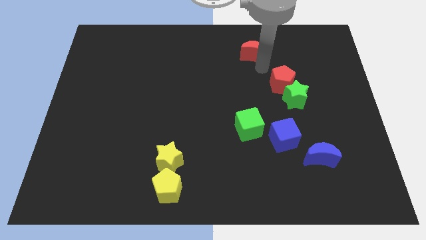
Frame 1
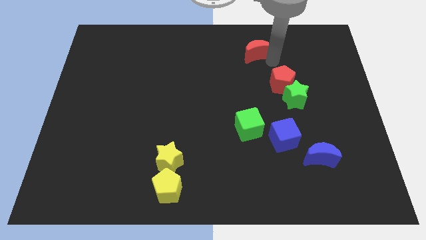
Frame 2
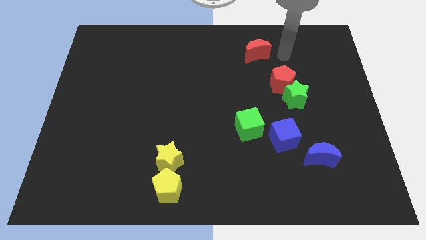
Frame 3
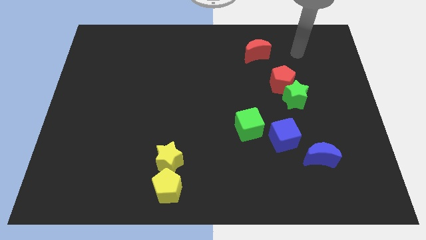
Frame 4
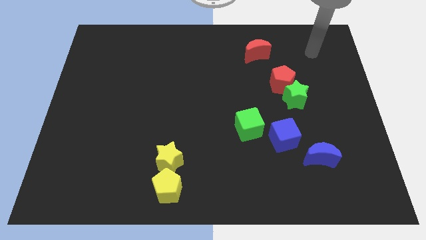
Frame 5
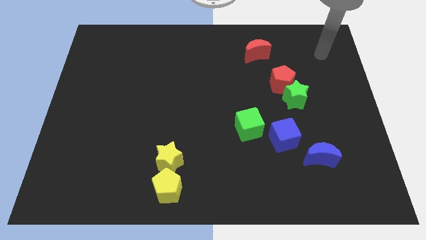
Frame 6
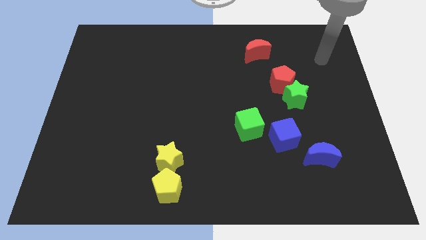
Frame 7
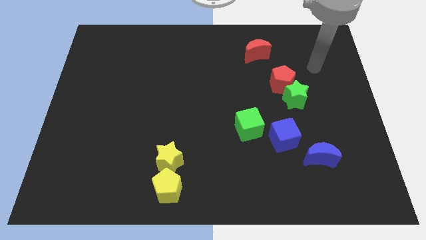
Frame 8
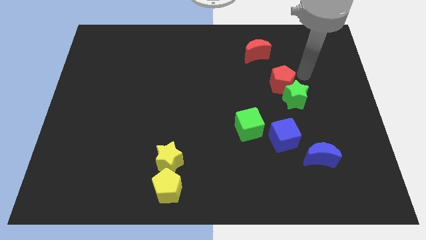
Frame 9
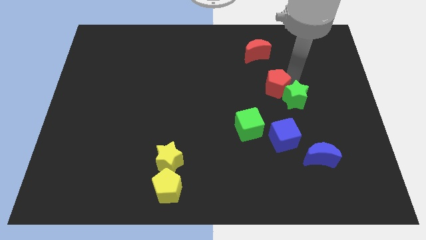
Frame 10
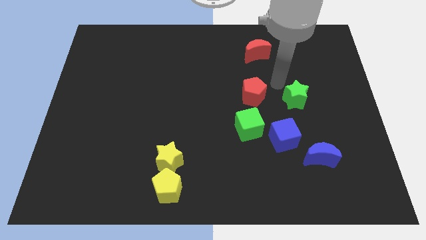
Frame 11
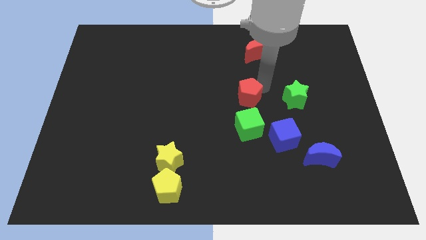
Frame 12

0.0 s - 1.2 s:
place the red pentagon above the green cube

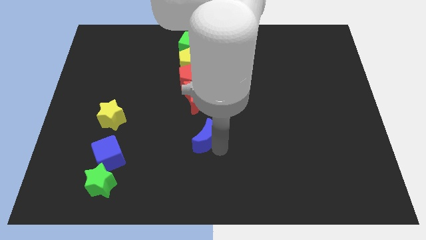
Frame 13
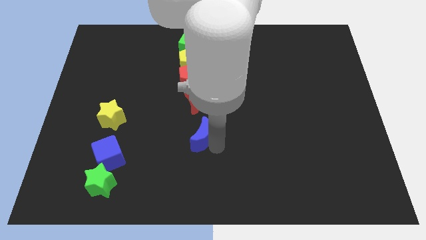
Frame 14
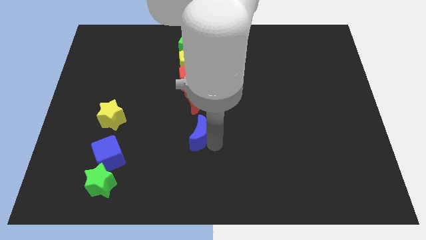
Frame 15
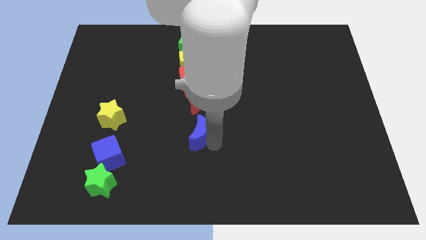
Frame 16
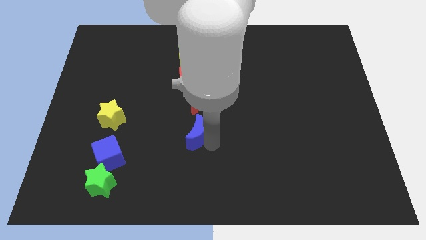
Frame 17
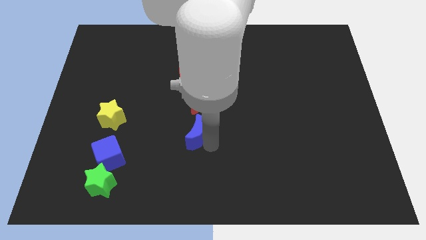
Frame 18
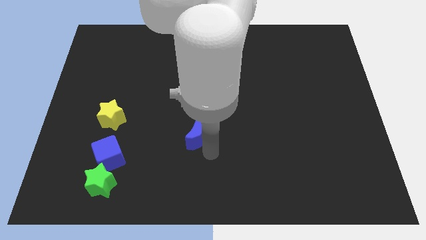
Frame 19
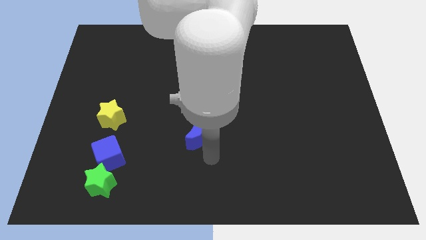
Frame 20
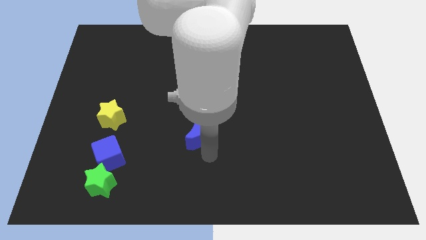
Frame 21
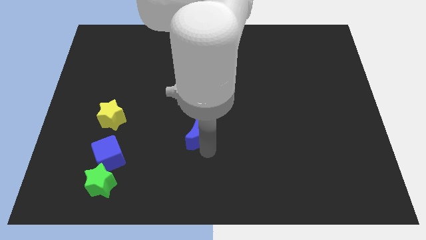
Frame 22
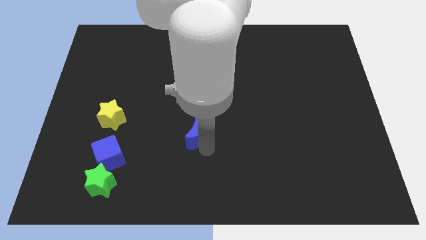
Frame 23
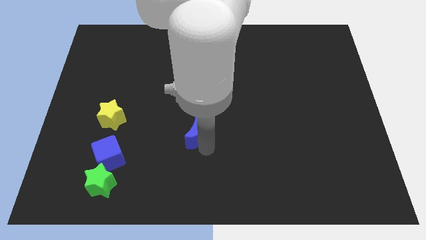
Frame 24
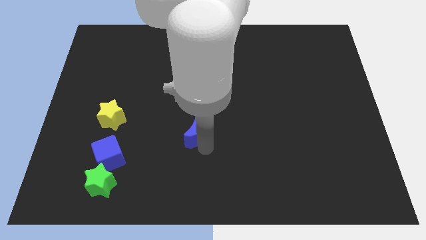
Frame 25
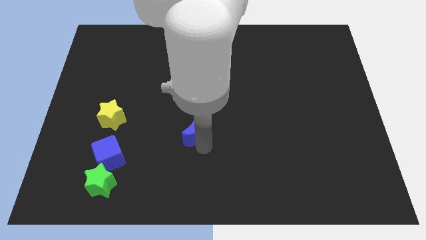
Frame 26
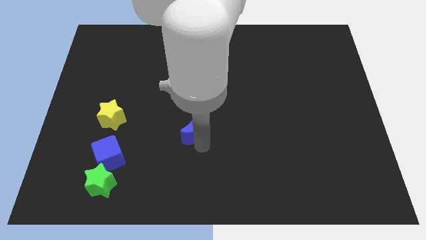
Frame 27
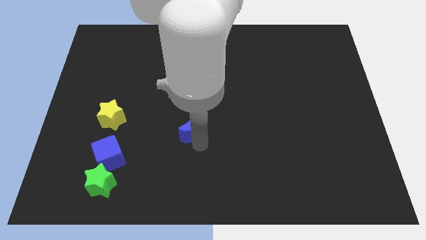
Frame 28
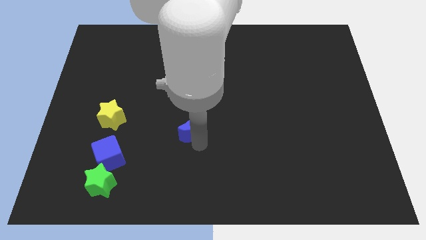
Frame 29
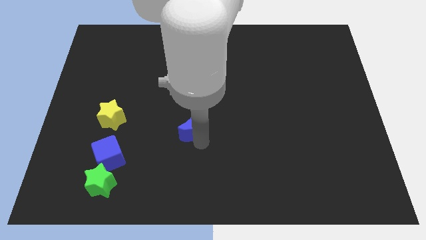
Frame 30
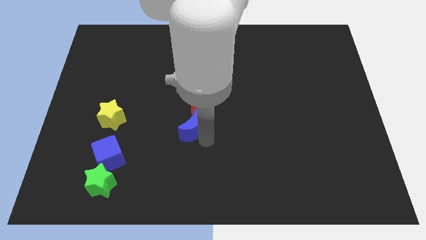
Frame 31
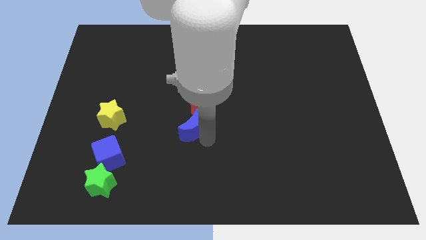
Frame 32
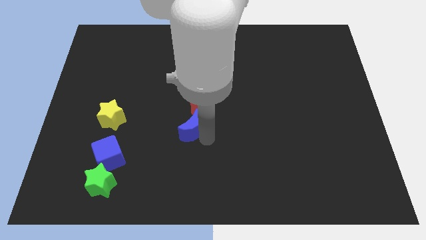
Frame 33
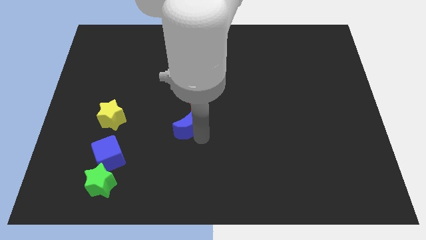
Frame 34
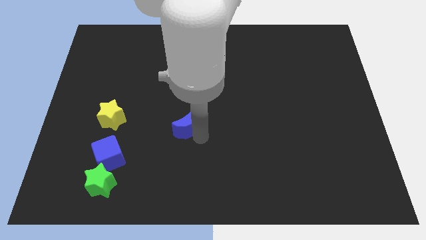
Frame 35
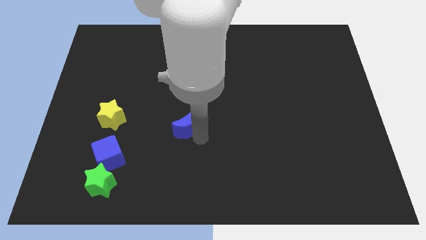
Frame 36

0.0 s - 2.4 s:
push blue moon into the red moon

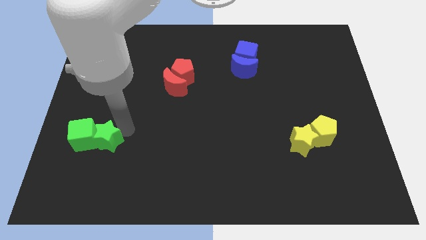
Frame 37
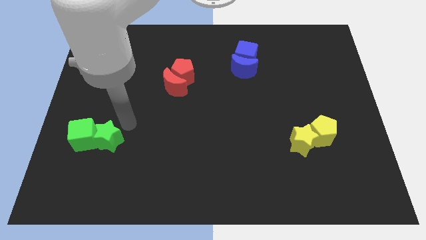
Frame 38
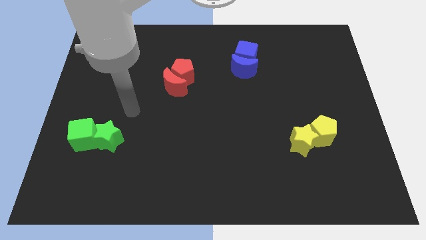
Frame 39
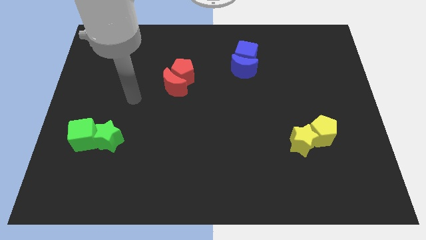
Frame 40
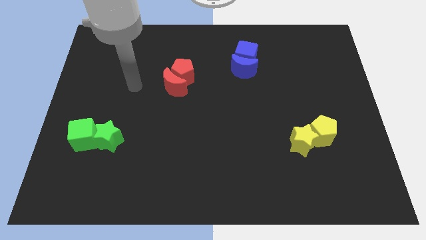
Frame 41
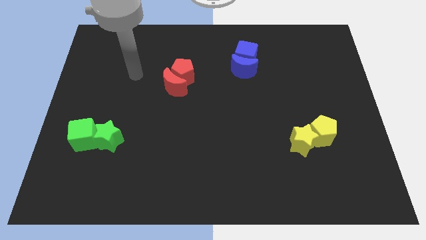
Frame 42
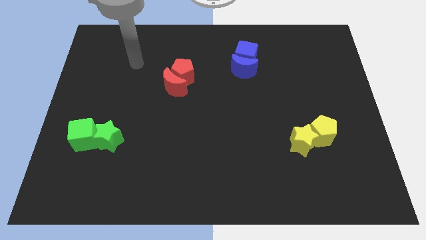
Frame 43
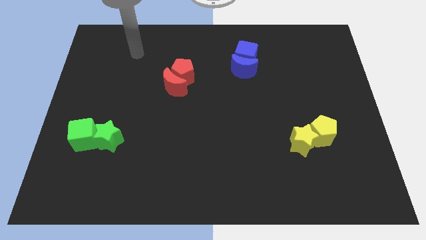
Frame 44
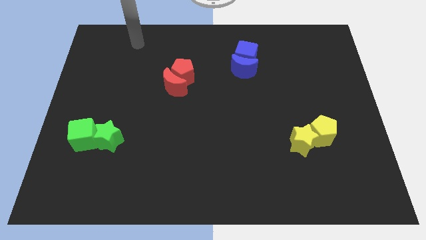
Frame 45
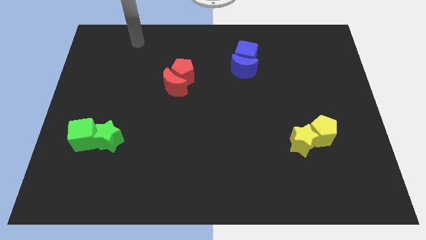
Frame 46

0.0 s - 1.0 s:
move the arm away from the green star

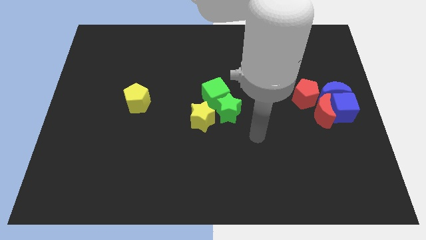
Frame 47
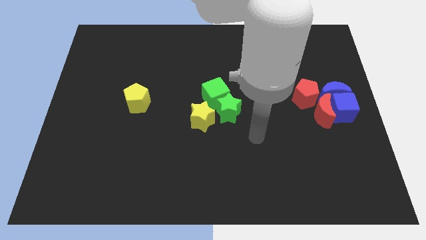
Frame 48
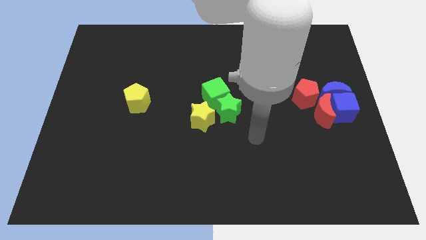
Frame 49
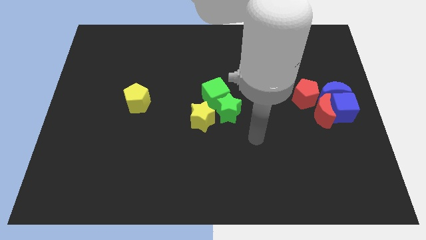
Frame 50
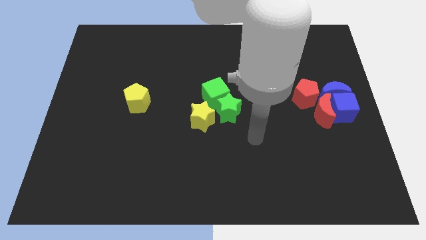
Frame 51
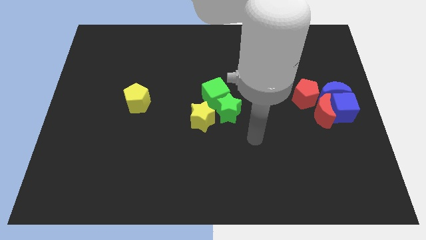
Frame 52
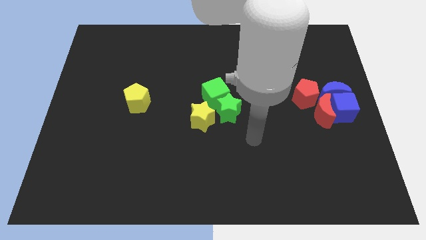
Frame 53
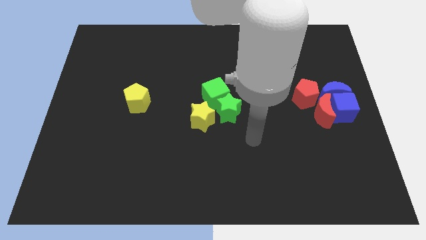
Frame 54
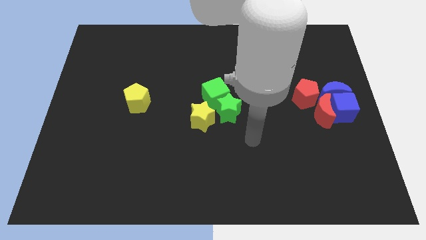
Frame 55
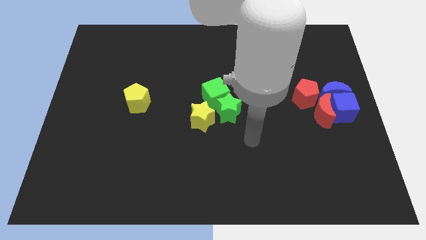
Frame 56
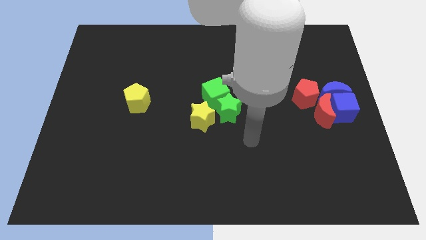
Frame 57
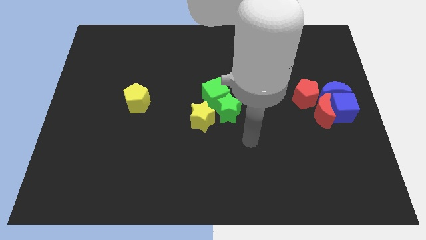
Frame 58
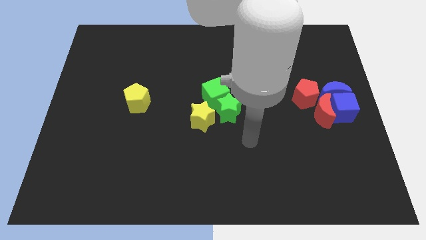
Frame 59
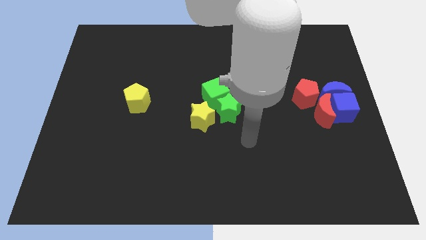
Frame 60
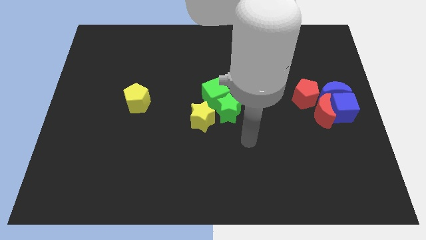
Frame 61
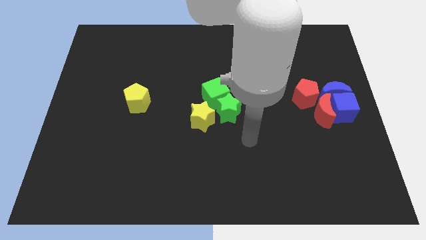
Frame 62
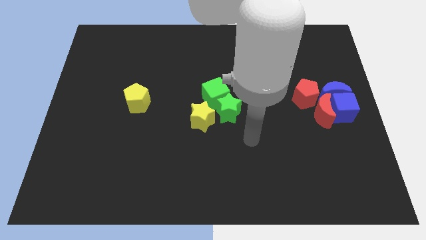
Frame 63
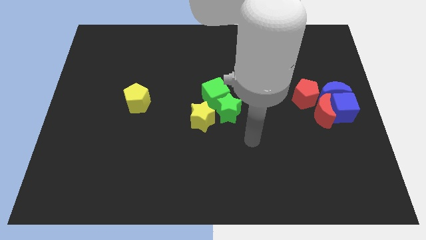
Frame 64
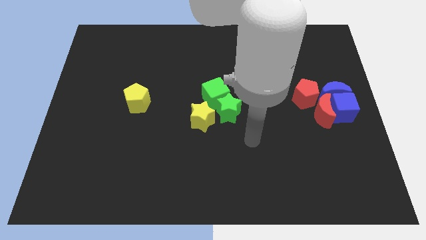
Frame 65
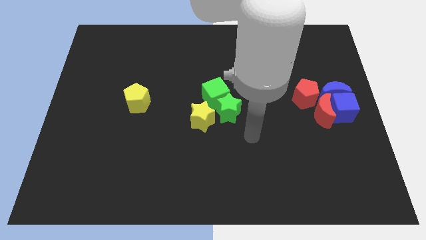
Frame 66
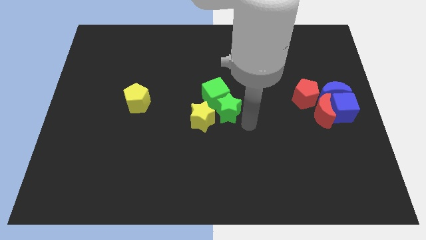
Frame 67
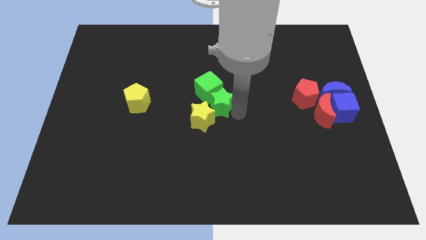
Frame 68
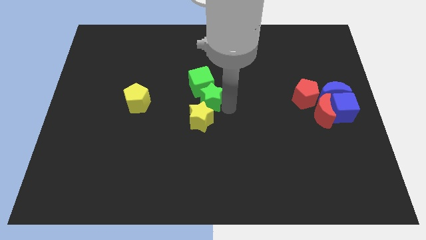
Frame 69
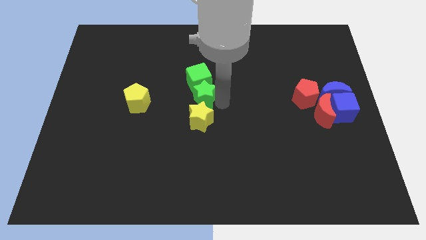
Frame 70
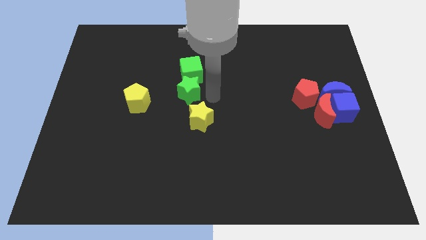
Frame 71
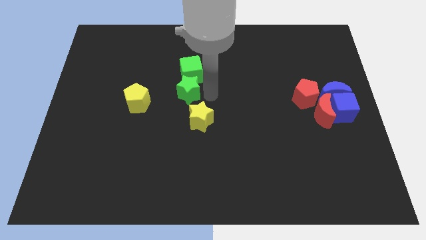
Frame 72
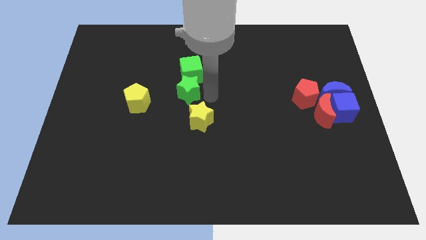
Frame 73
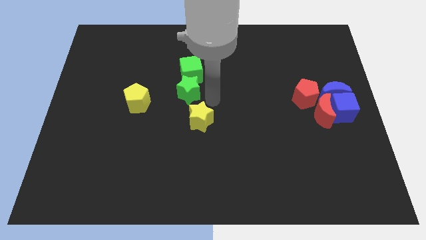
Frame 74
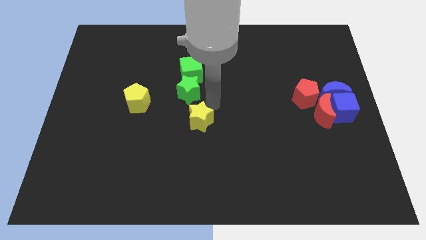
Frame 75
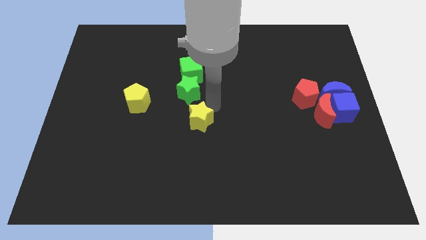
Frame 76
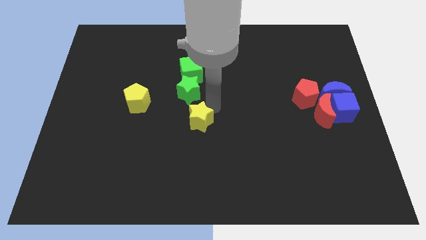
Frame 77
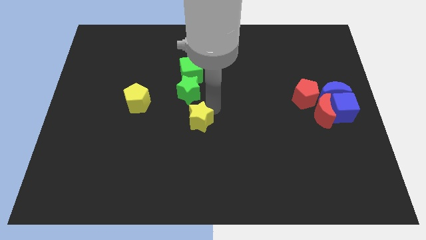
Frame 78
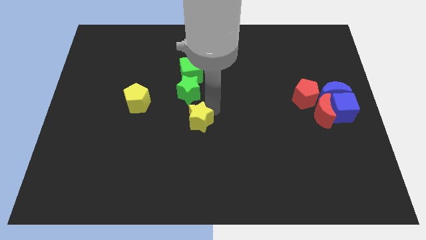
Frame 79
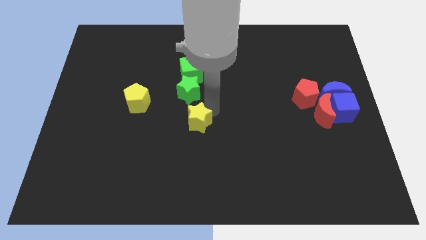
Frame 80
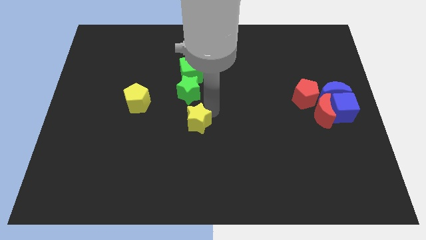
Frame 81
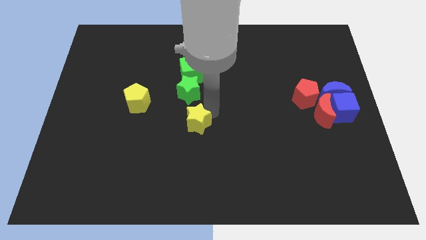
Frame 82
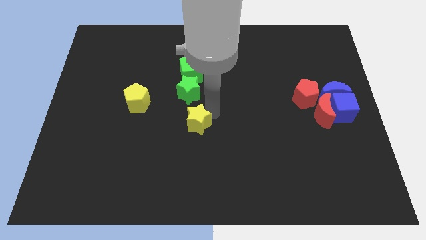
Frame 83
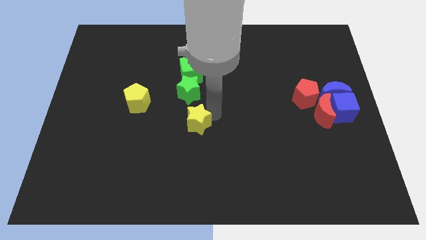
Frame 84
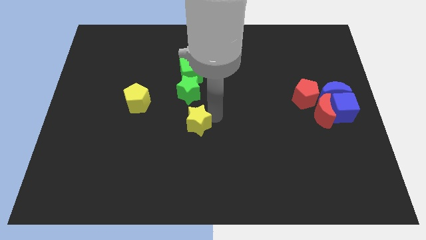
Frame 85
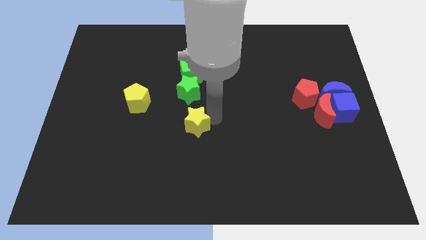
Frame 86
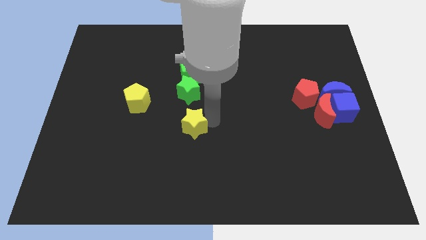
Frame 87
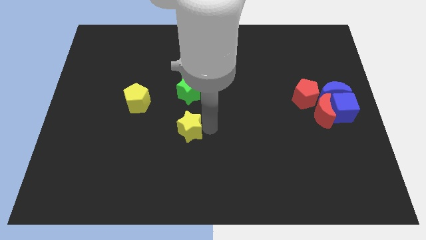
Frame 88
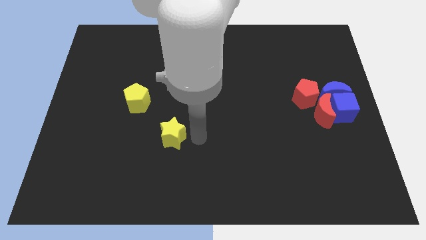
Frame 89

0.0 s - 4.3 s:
move the green star and green cube towards up

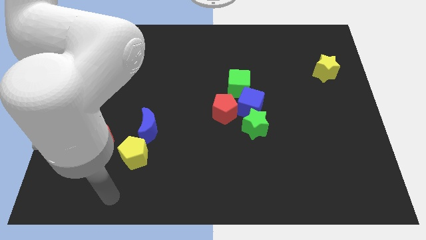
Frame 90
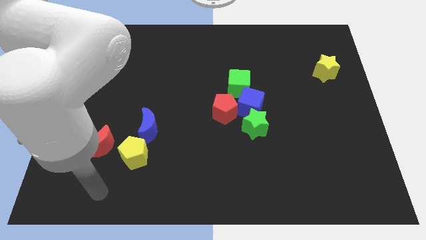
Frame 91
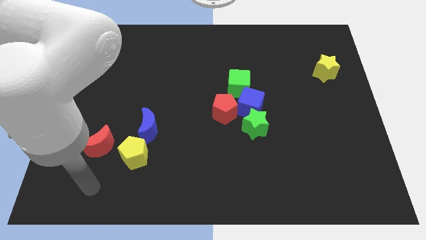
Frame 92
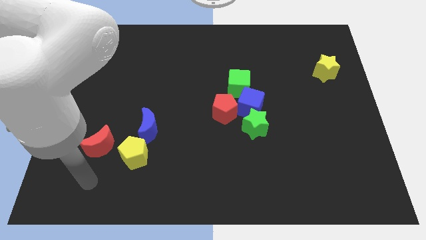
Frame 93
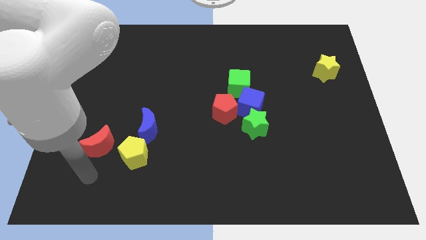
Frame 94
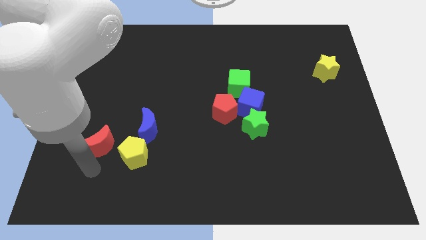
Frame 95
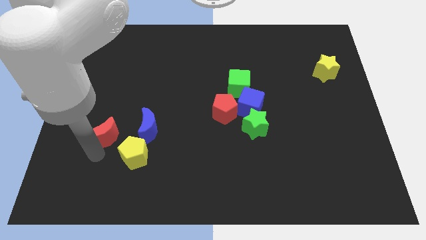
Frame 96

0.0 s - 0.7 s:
place the arm down to the red moon
